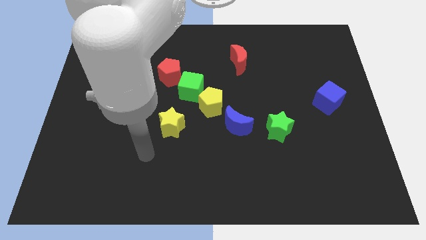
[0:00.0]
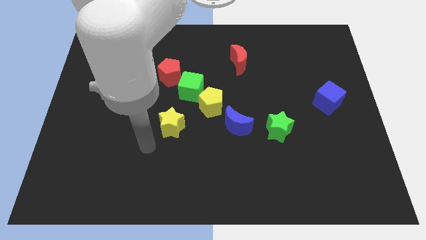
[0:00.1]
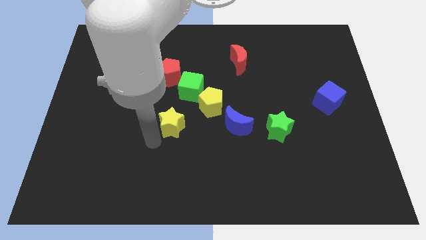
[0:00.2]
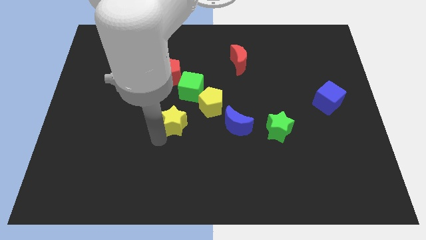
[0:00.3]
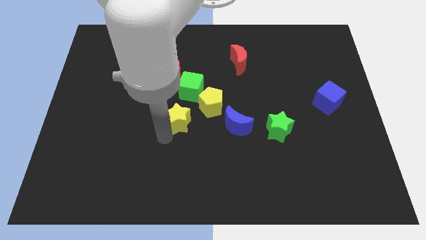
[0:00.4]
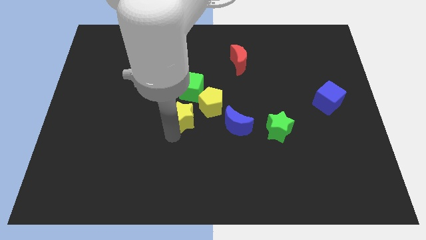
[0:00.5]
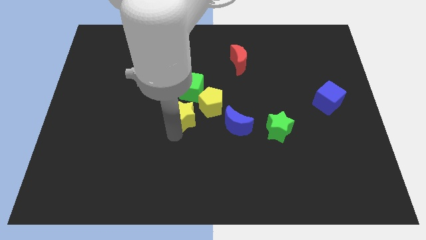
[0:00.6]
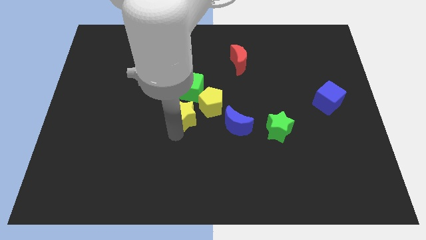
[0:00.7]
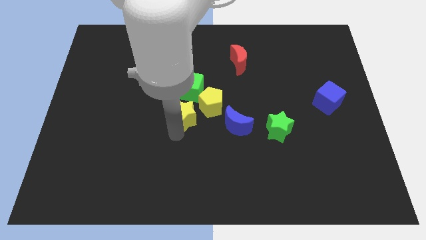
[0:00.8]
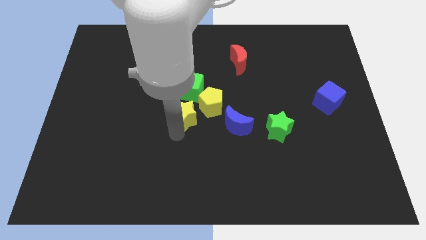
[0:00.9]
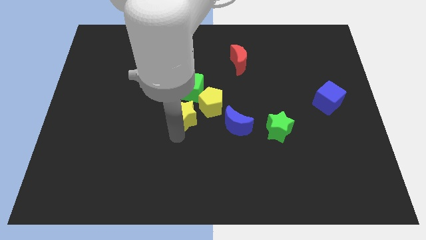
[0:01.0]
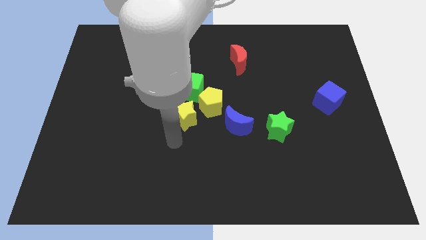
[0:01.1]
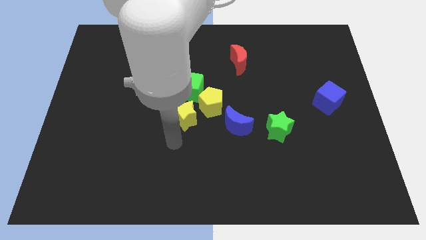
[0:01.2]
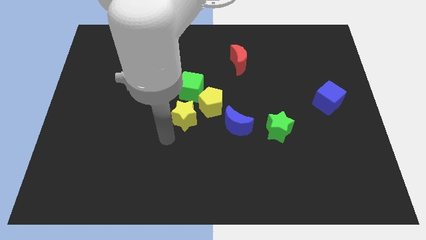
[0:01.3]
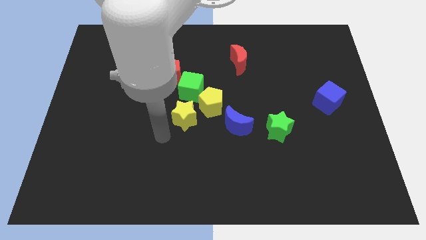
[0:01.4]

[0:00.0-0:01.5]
push the yellow star below the green cube

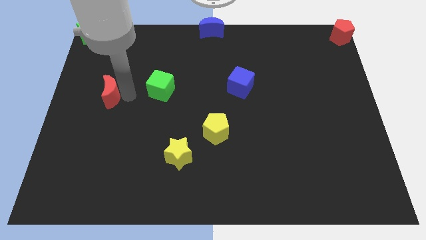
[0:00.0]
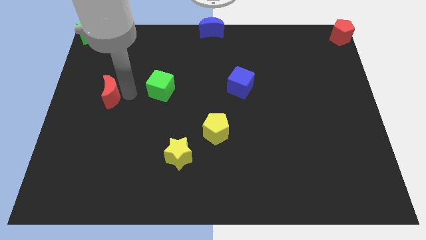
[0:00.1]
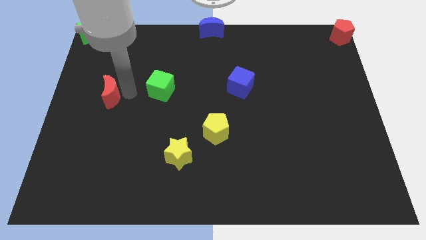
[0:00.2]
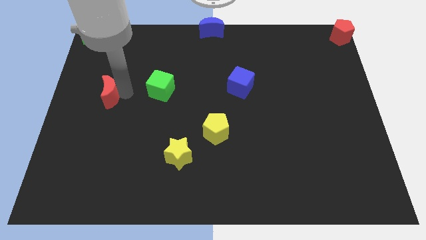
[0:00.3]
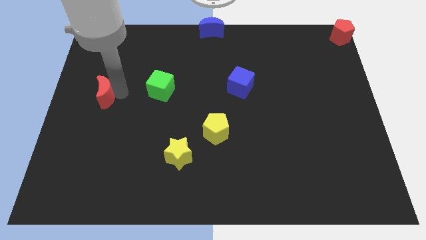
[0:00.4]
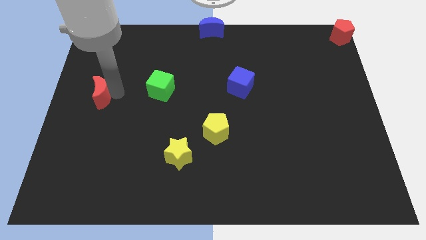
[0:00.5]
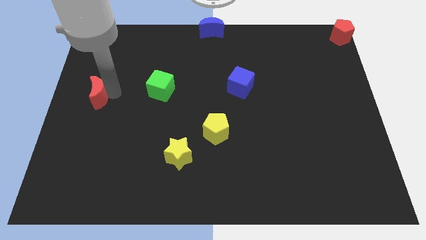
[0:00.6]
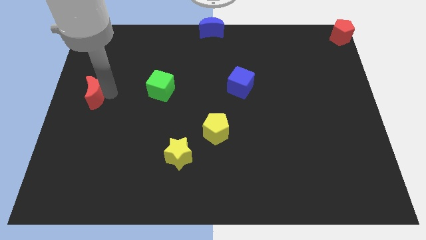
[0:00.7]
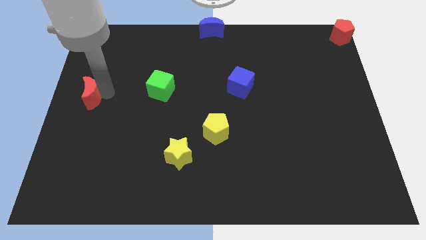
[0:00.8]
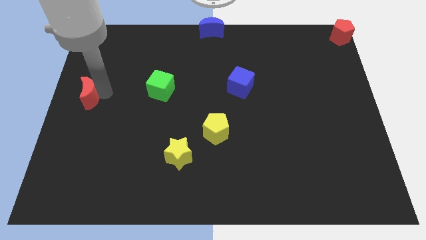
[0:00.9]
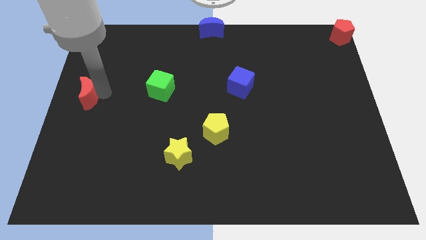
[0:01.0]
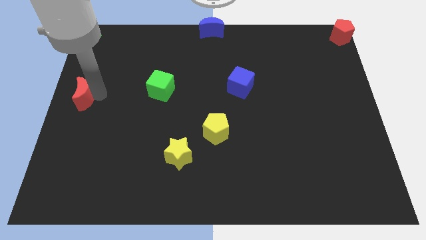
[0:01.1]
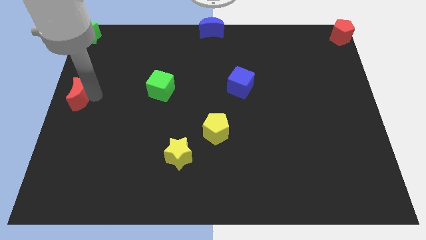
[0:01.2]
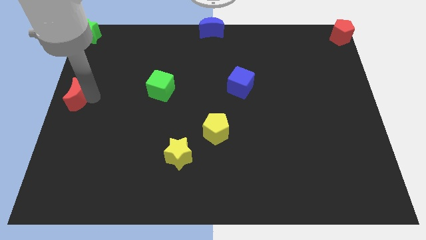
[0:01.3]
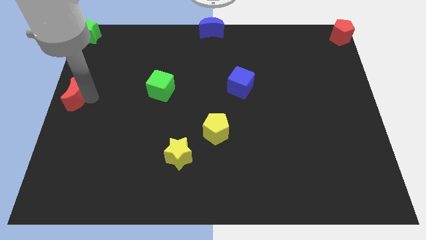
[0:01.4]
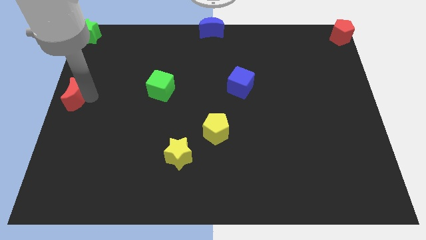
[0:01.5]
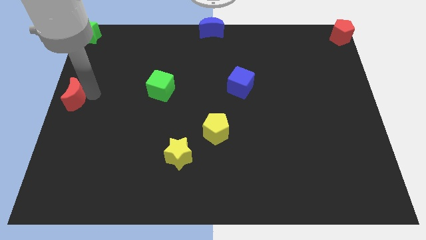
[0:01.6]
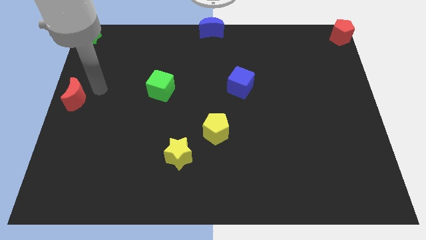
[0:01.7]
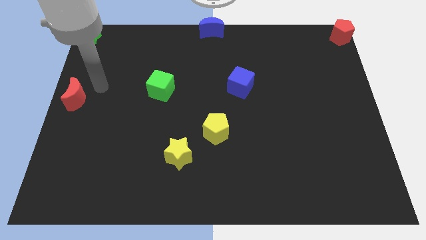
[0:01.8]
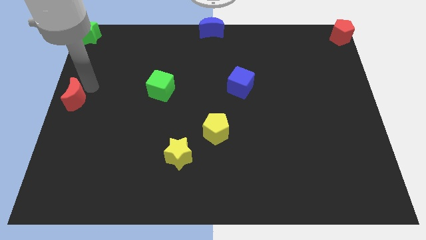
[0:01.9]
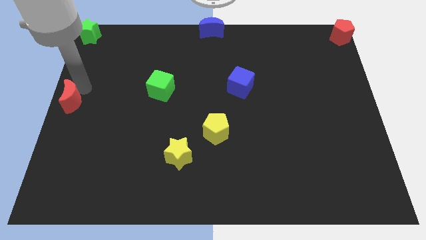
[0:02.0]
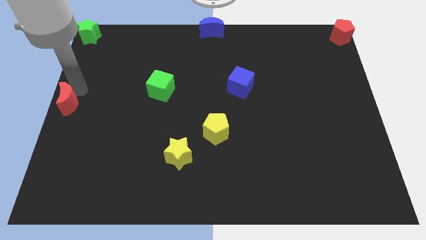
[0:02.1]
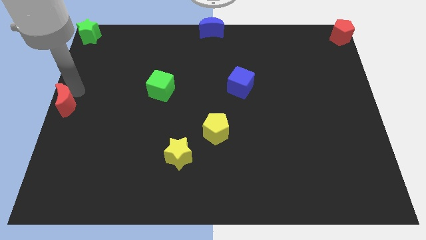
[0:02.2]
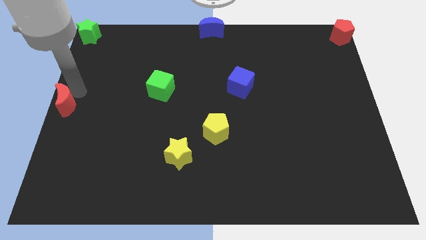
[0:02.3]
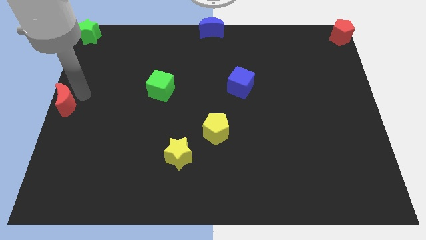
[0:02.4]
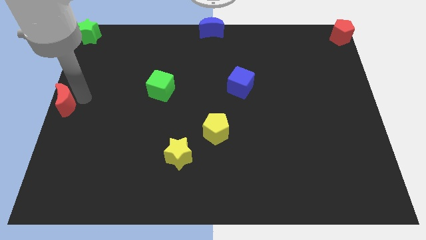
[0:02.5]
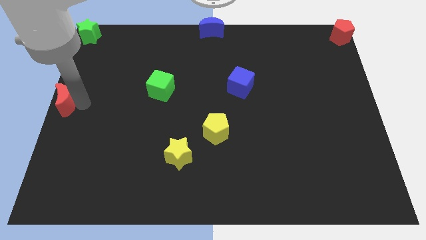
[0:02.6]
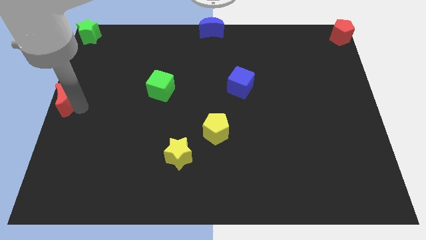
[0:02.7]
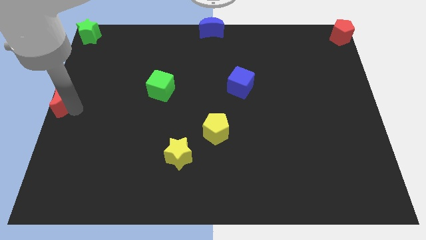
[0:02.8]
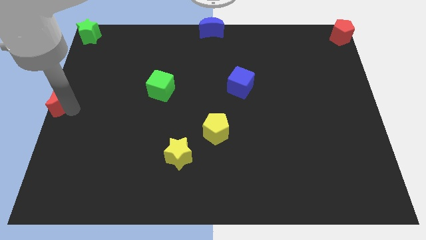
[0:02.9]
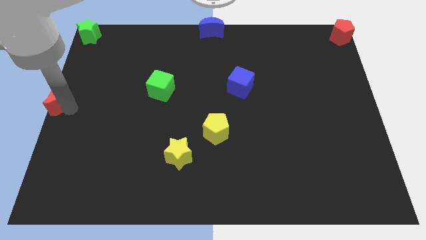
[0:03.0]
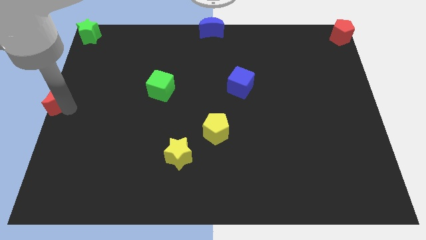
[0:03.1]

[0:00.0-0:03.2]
place the red crescent at the left center of the board

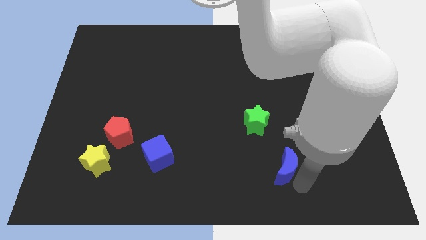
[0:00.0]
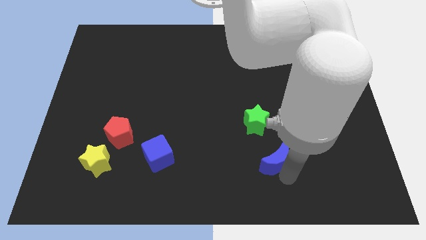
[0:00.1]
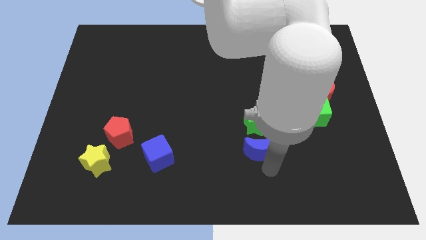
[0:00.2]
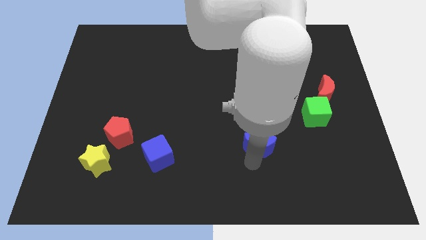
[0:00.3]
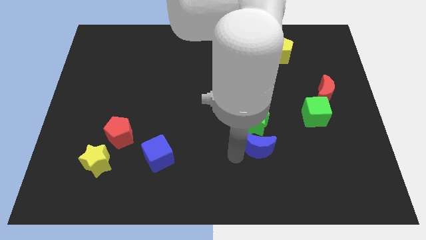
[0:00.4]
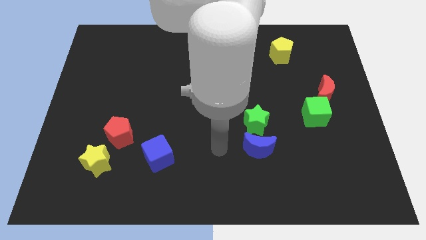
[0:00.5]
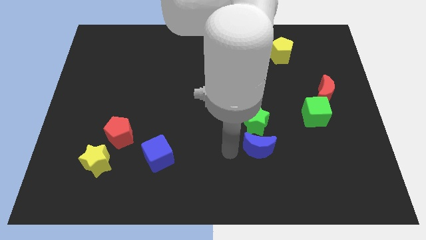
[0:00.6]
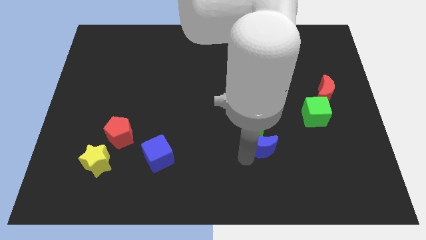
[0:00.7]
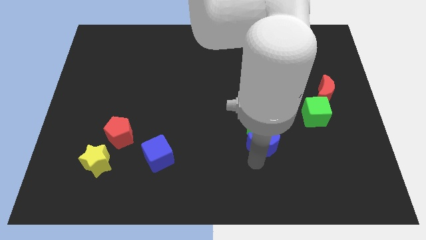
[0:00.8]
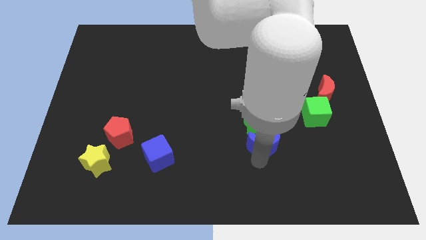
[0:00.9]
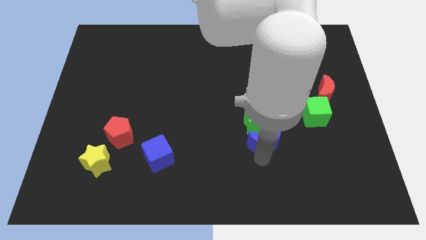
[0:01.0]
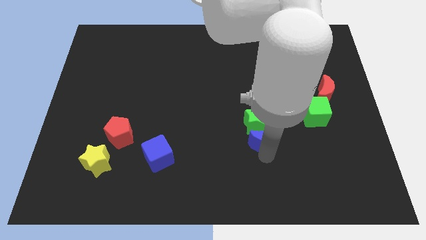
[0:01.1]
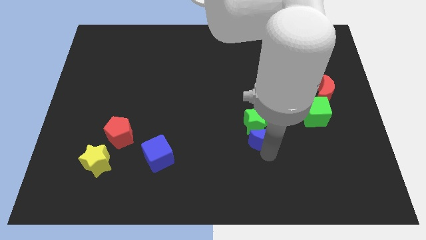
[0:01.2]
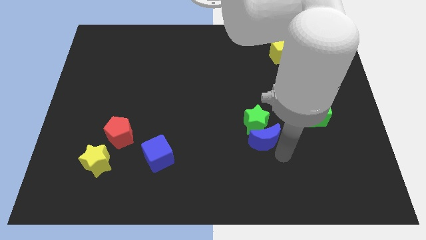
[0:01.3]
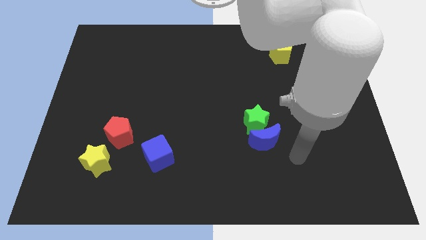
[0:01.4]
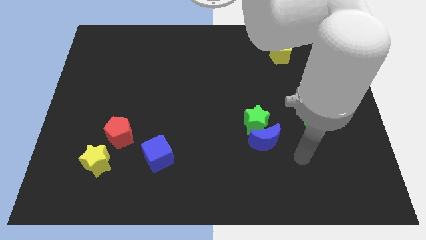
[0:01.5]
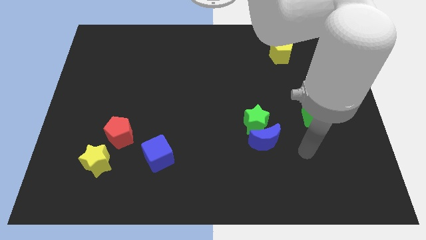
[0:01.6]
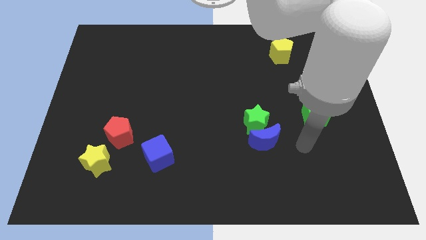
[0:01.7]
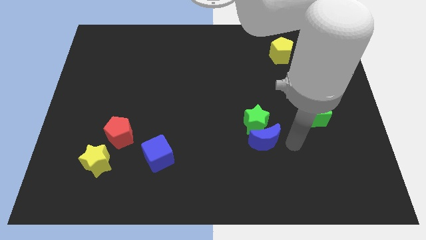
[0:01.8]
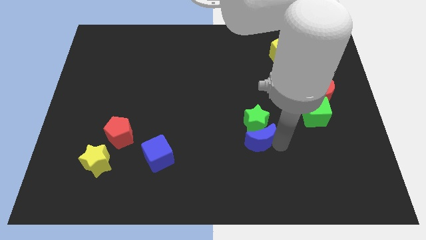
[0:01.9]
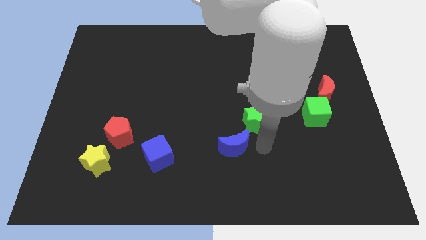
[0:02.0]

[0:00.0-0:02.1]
move blue moon below the green star

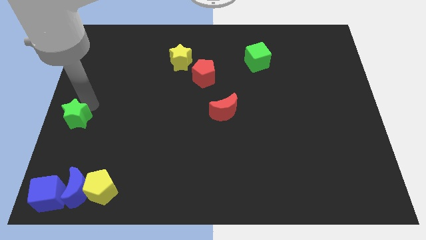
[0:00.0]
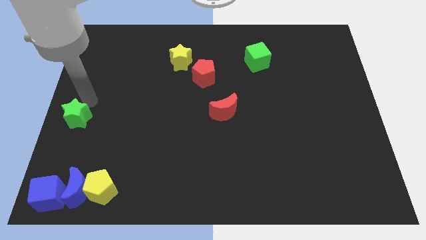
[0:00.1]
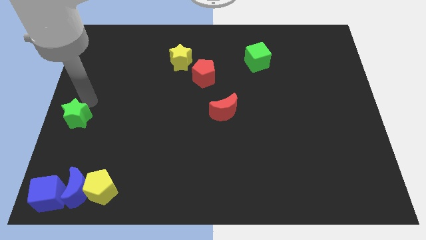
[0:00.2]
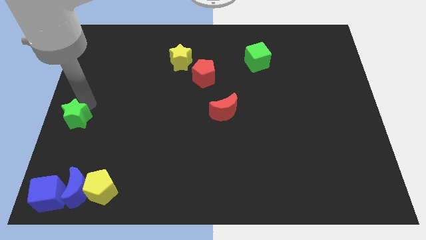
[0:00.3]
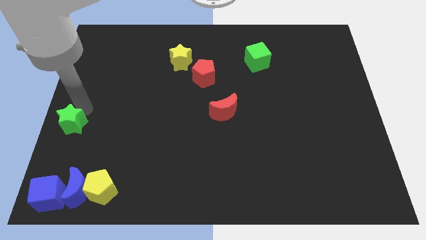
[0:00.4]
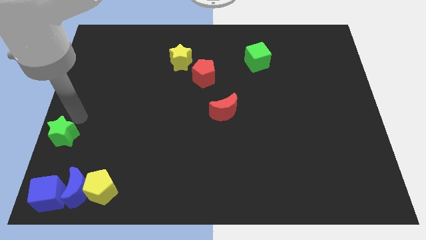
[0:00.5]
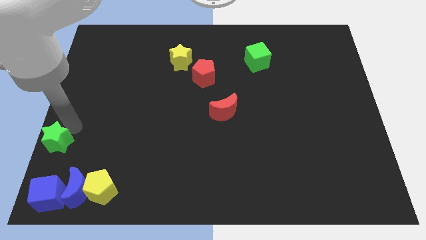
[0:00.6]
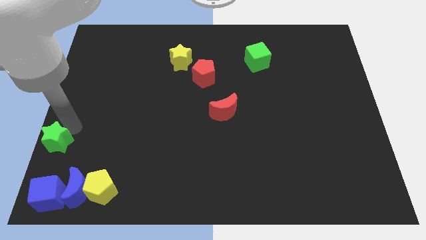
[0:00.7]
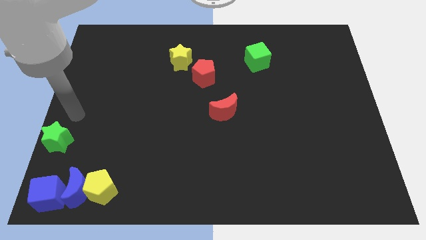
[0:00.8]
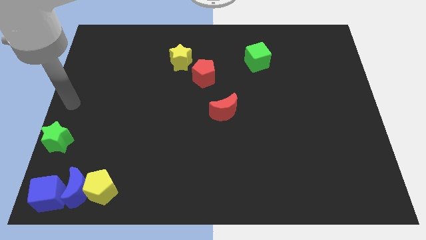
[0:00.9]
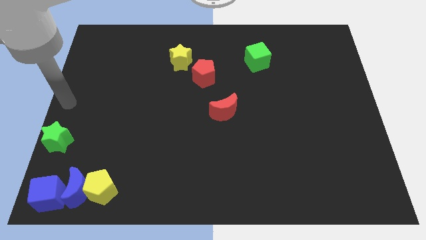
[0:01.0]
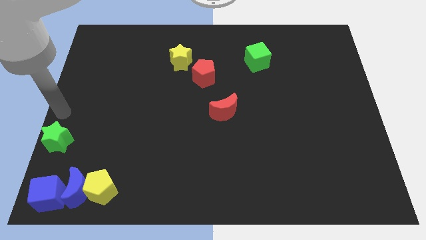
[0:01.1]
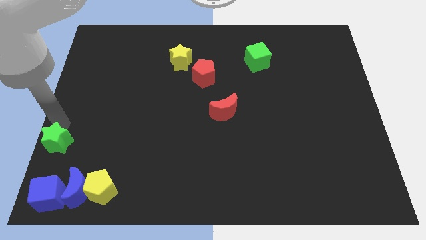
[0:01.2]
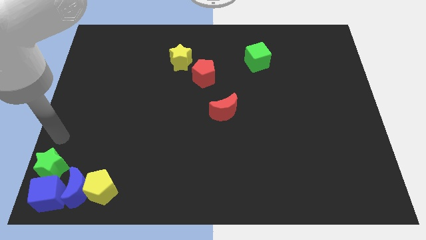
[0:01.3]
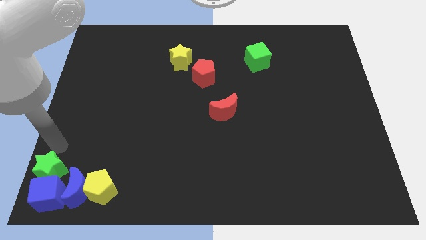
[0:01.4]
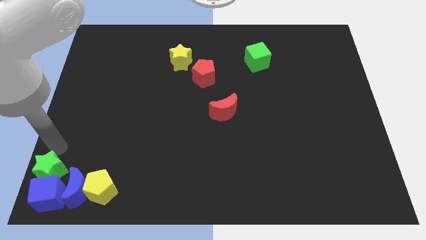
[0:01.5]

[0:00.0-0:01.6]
place green star above blue cube

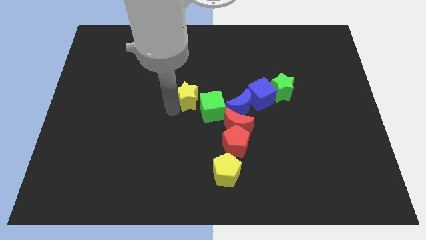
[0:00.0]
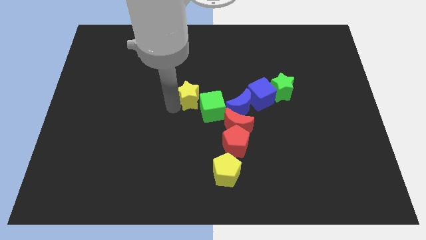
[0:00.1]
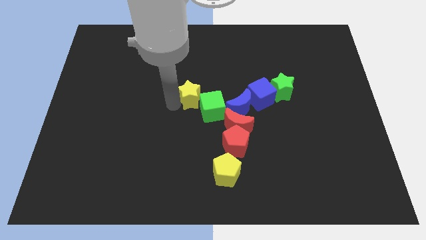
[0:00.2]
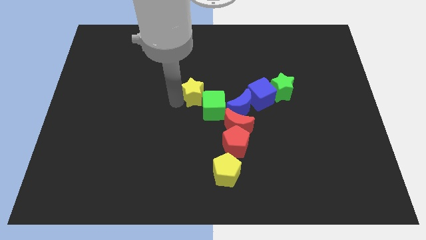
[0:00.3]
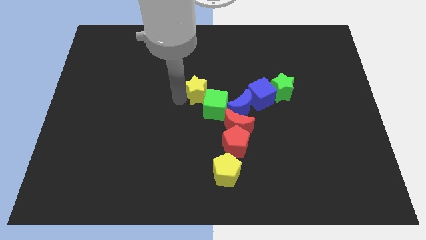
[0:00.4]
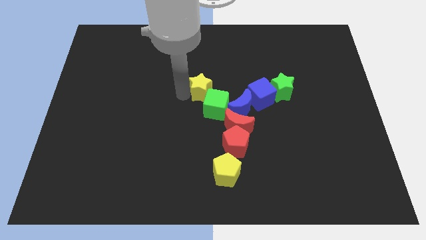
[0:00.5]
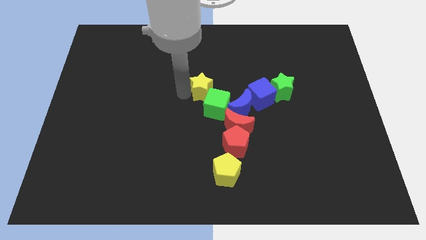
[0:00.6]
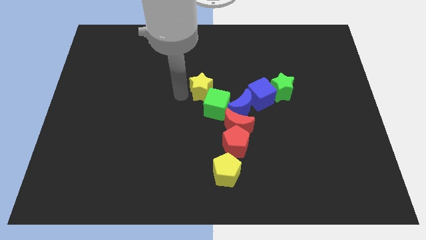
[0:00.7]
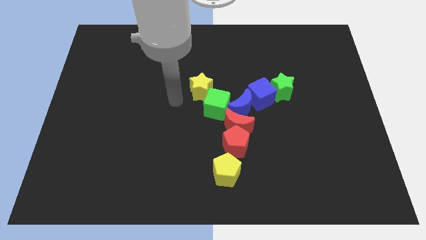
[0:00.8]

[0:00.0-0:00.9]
push the yellow star into the green cube
